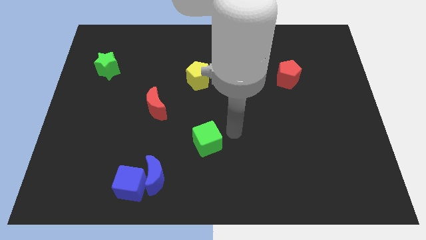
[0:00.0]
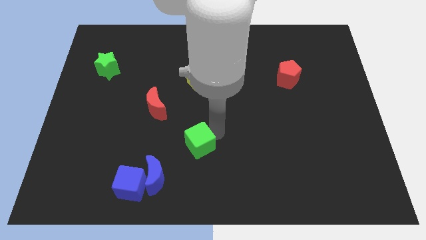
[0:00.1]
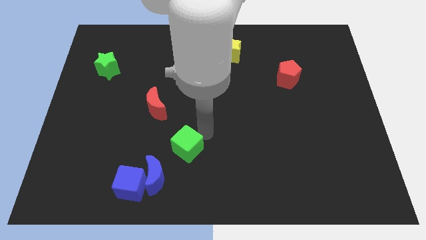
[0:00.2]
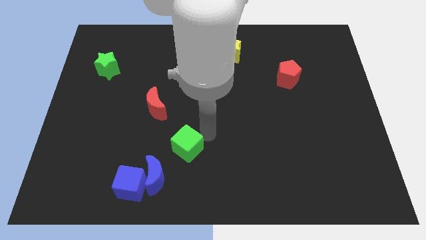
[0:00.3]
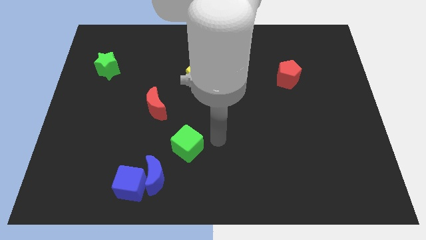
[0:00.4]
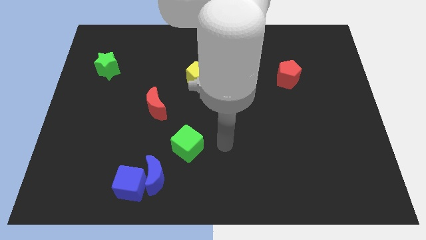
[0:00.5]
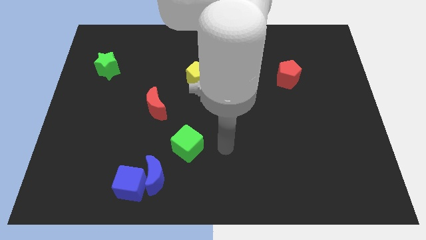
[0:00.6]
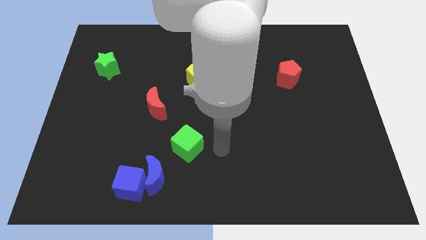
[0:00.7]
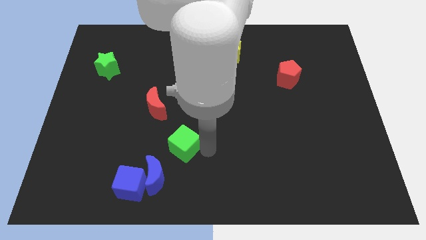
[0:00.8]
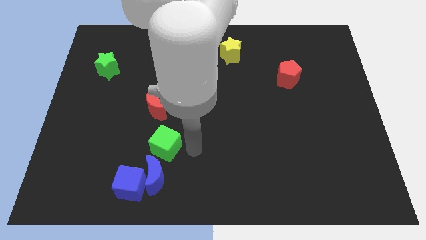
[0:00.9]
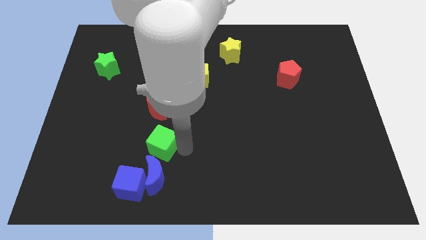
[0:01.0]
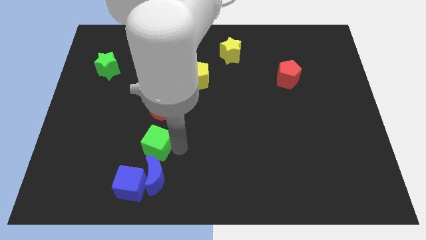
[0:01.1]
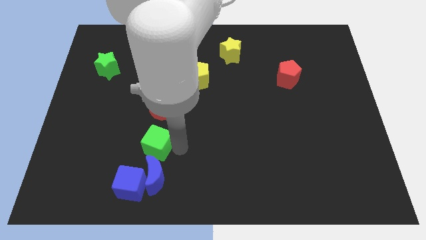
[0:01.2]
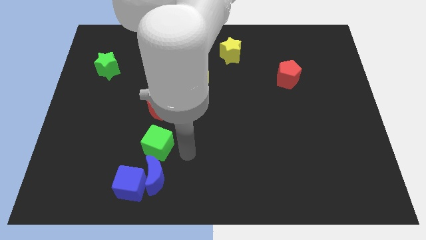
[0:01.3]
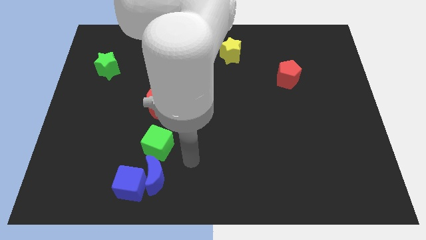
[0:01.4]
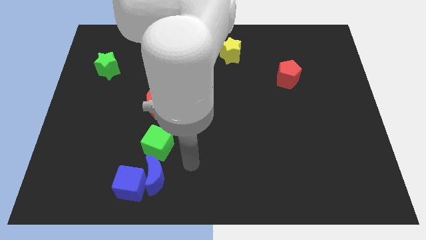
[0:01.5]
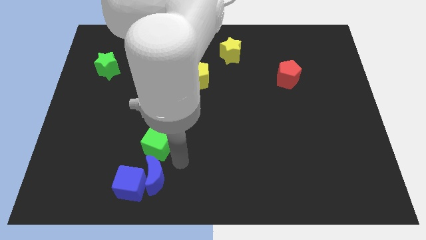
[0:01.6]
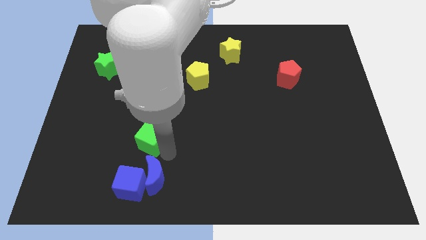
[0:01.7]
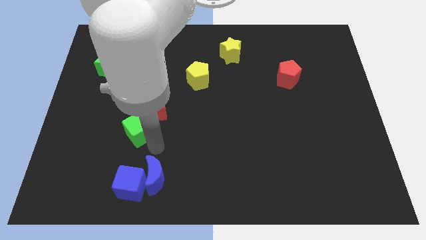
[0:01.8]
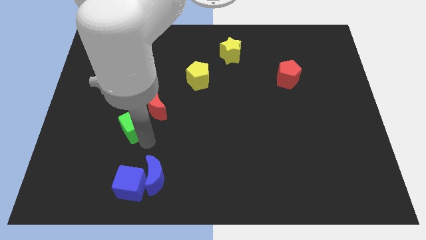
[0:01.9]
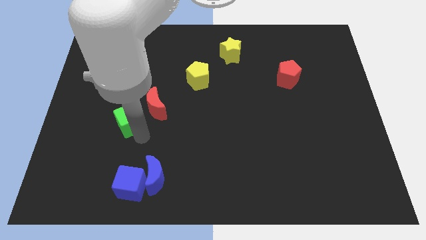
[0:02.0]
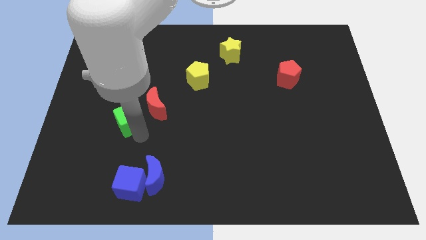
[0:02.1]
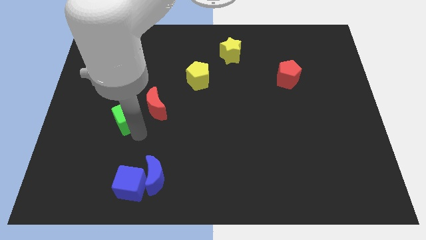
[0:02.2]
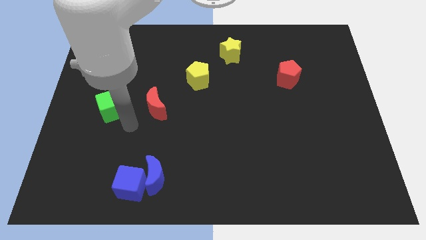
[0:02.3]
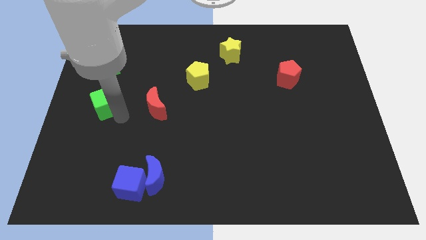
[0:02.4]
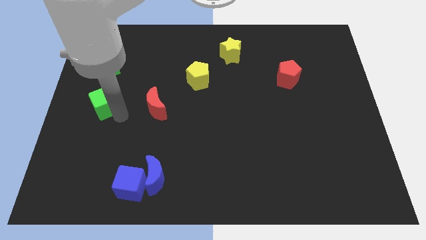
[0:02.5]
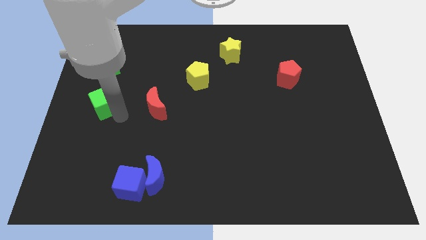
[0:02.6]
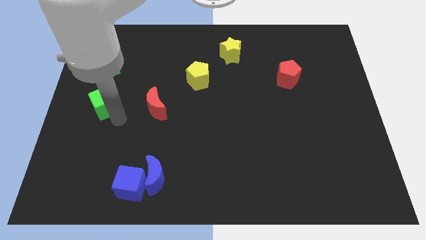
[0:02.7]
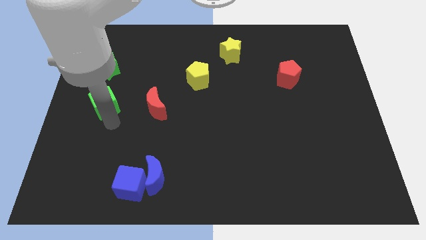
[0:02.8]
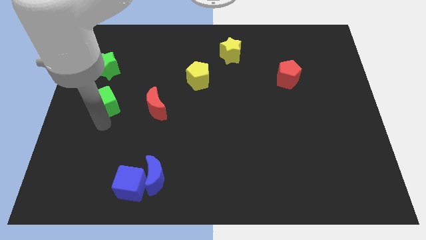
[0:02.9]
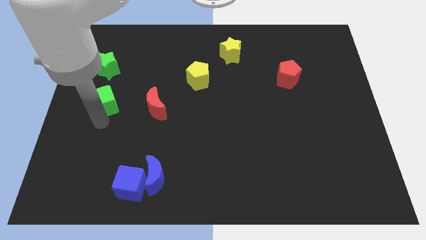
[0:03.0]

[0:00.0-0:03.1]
push the green cube towards the bottom side of the green star

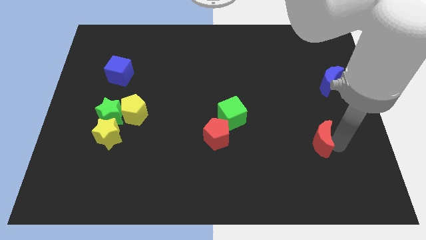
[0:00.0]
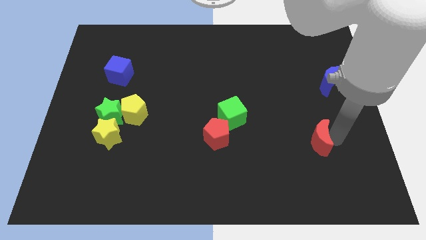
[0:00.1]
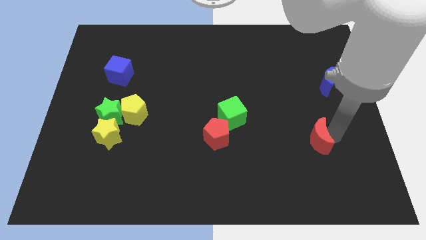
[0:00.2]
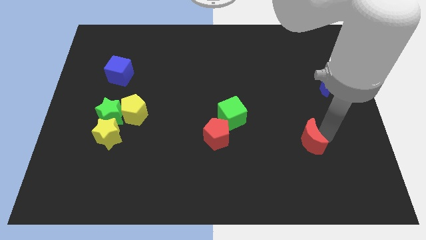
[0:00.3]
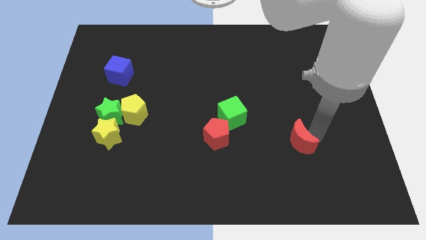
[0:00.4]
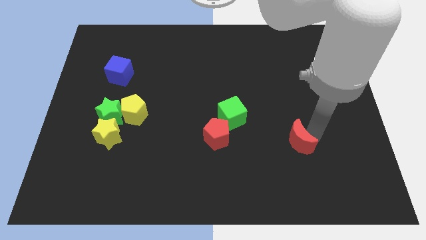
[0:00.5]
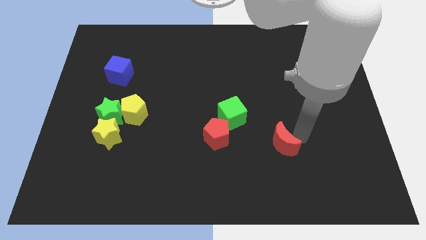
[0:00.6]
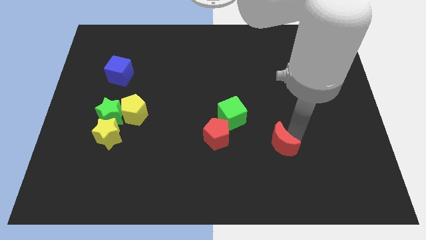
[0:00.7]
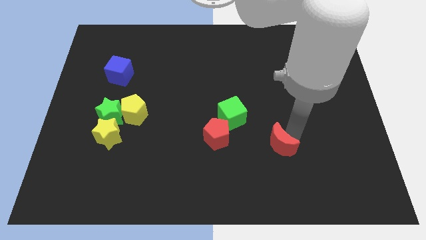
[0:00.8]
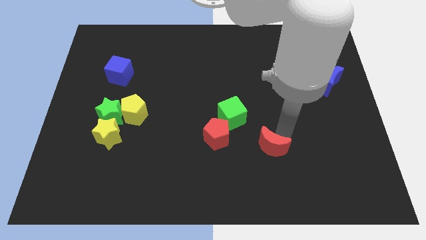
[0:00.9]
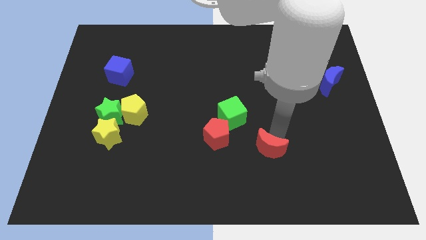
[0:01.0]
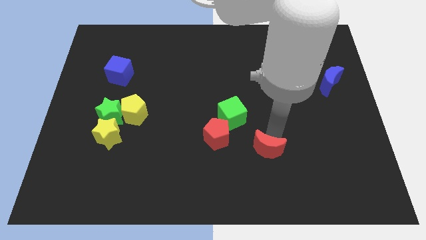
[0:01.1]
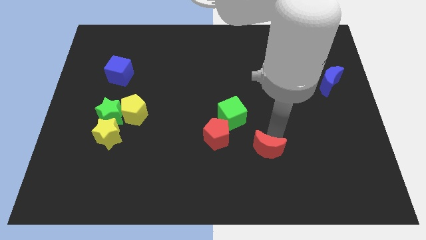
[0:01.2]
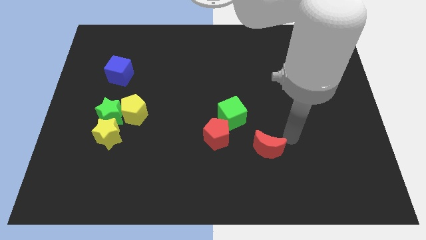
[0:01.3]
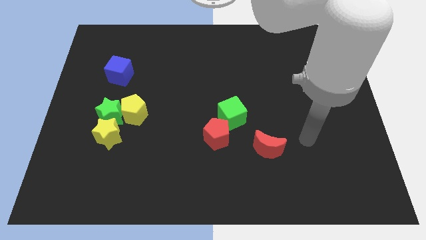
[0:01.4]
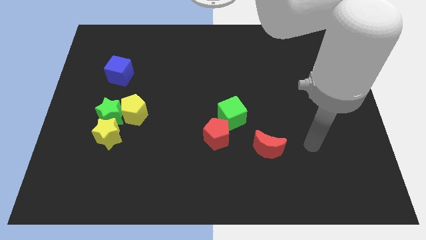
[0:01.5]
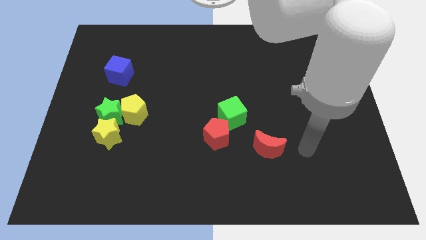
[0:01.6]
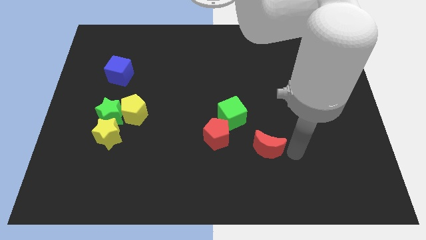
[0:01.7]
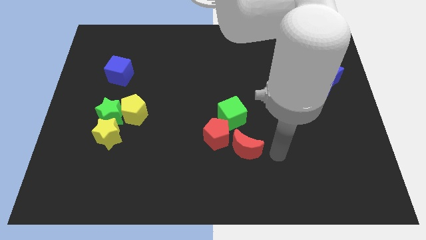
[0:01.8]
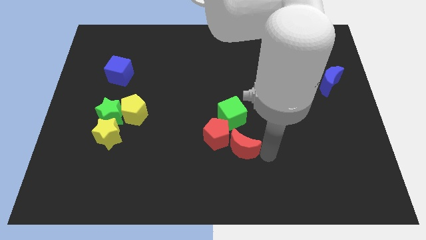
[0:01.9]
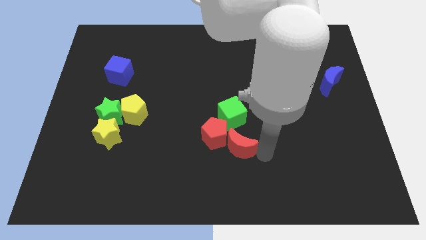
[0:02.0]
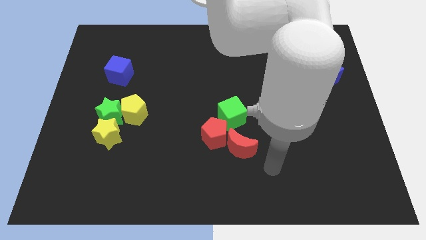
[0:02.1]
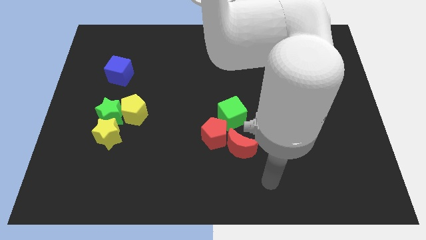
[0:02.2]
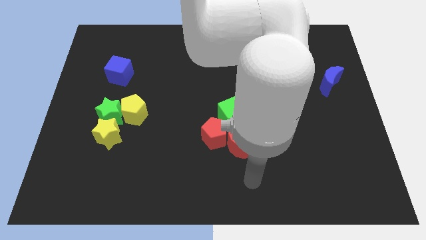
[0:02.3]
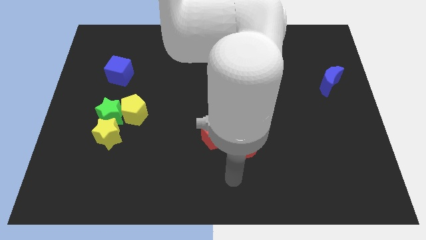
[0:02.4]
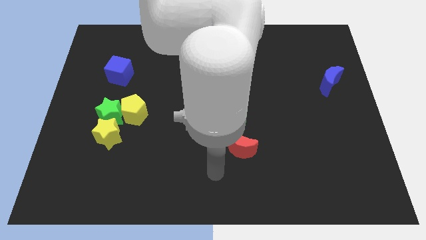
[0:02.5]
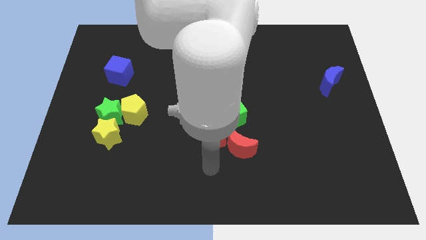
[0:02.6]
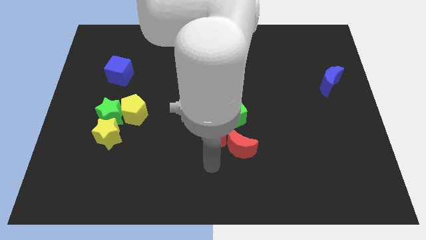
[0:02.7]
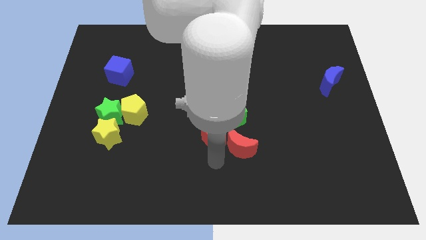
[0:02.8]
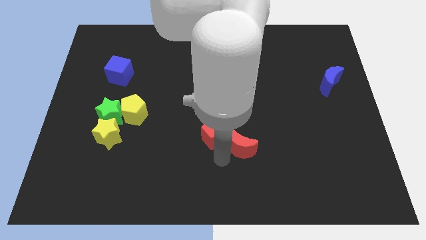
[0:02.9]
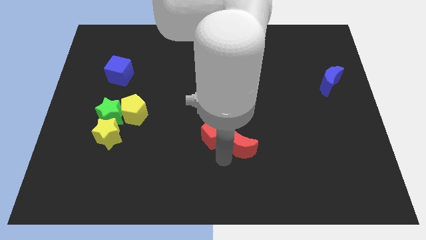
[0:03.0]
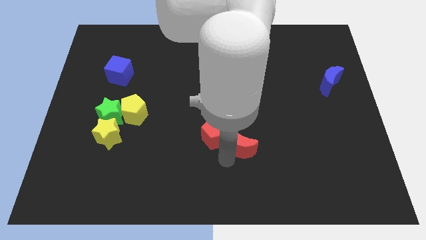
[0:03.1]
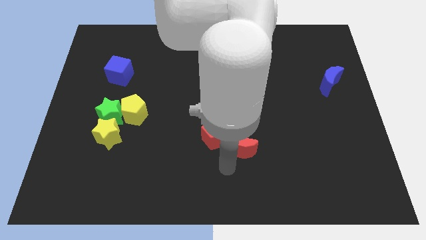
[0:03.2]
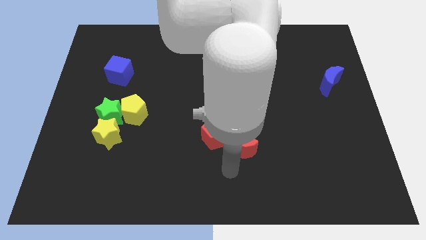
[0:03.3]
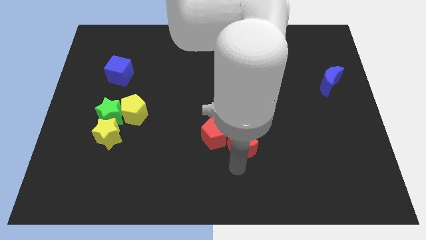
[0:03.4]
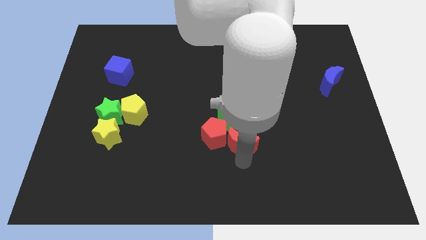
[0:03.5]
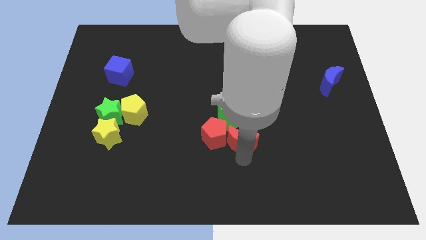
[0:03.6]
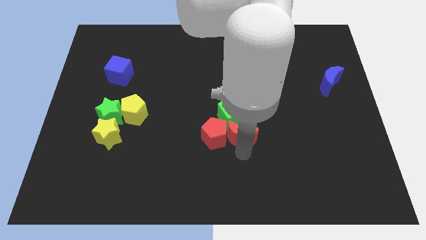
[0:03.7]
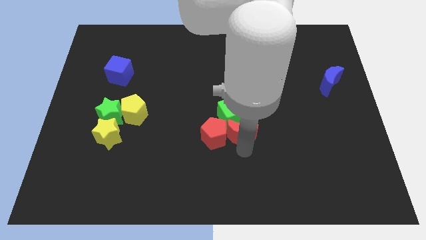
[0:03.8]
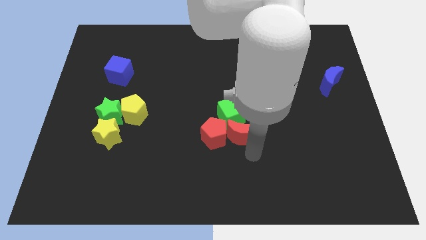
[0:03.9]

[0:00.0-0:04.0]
push the red crescent into the bottom of the green cube

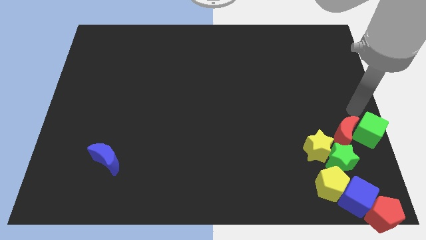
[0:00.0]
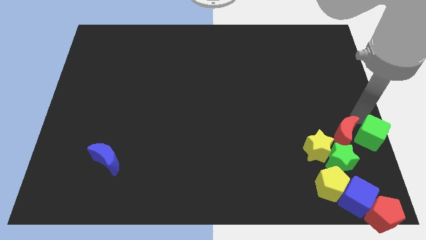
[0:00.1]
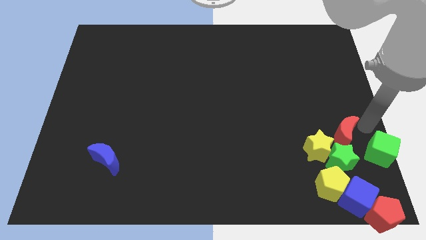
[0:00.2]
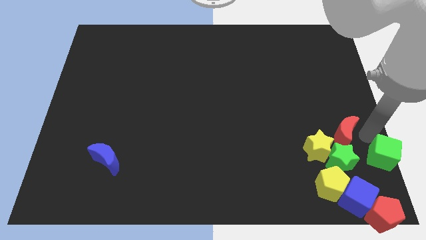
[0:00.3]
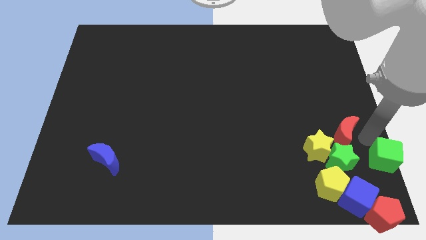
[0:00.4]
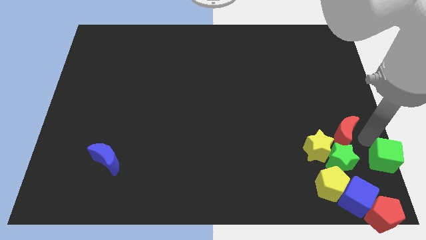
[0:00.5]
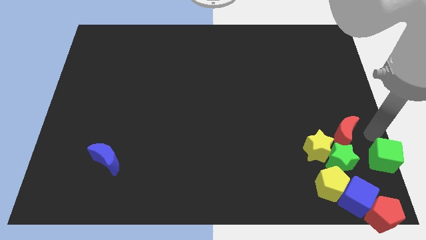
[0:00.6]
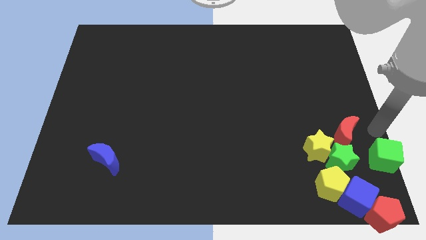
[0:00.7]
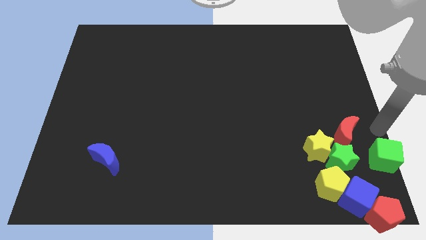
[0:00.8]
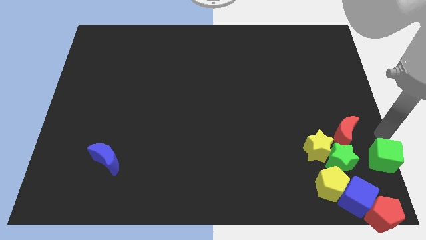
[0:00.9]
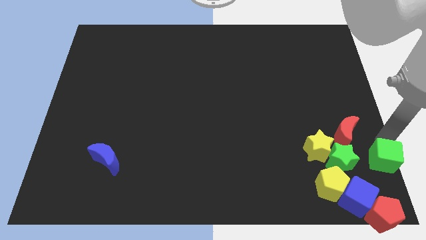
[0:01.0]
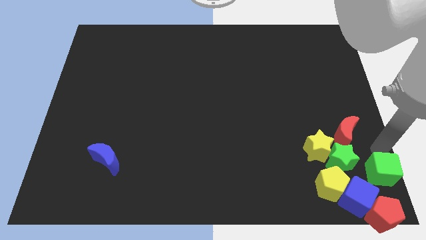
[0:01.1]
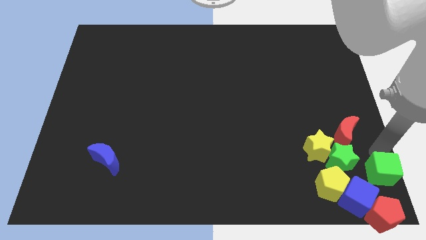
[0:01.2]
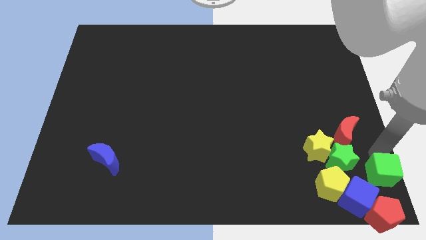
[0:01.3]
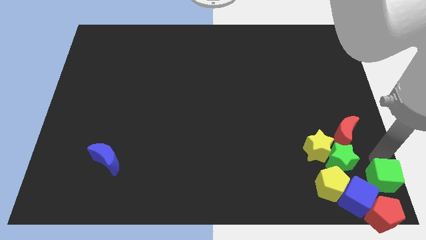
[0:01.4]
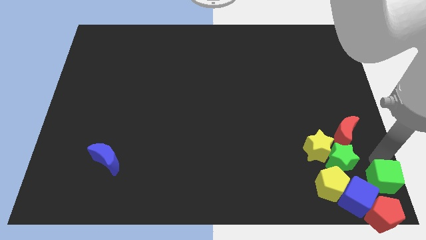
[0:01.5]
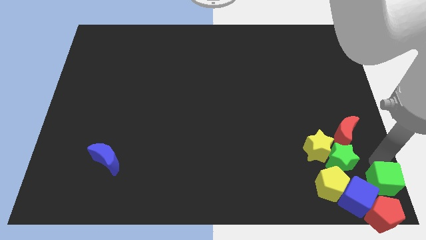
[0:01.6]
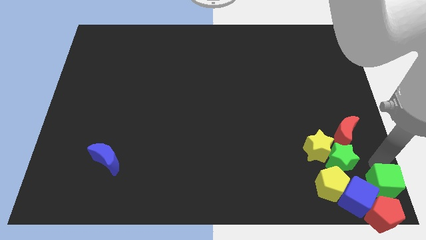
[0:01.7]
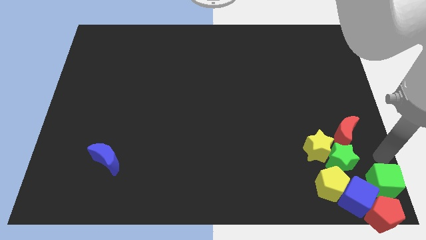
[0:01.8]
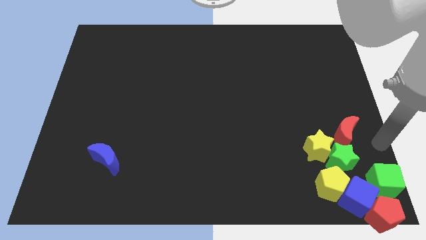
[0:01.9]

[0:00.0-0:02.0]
move green cube right above the red pentagon
